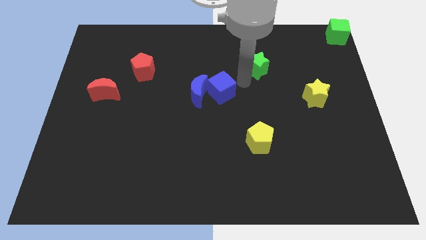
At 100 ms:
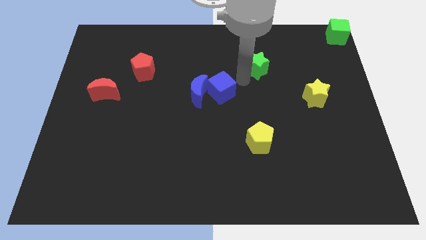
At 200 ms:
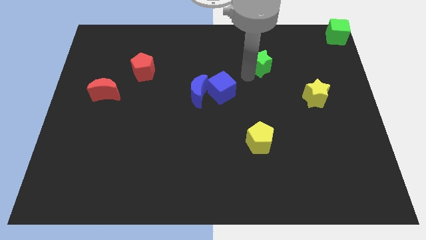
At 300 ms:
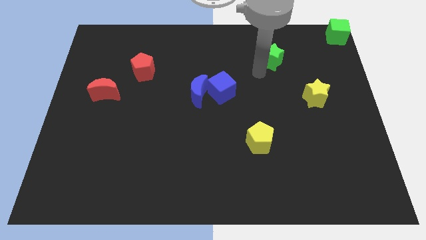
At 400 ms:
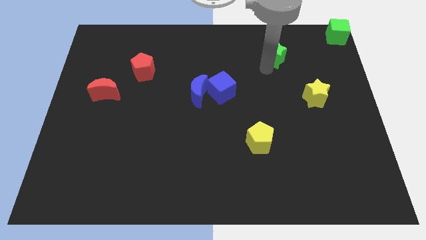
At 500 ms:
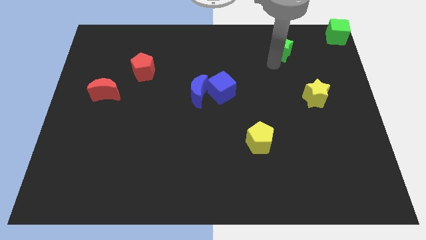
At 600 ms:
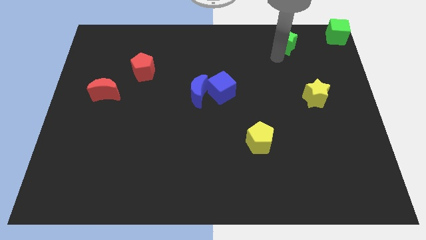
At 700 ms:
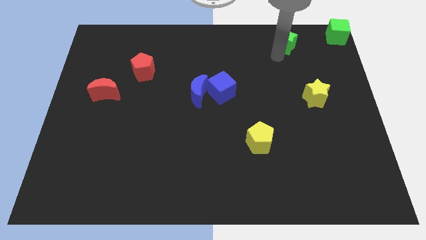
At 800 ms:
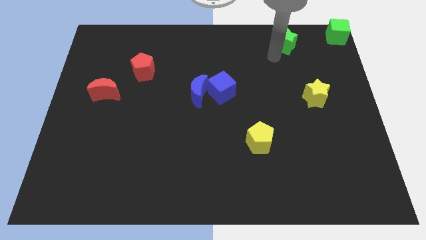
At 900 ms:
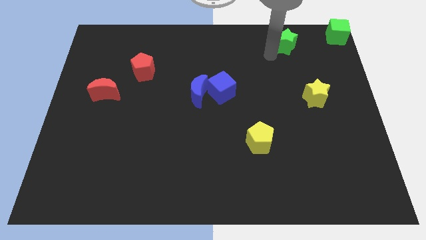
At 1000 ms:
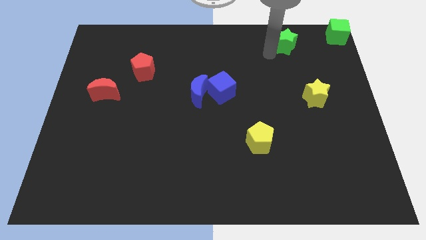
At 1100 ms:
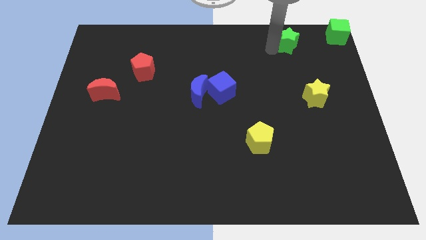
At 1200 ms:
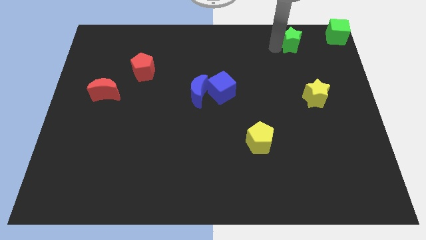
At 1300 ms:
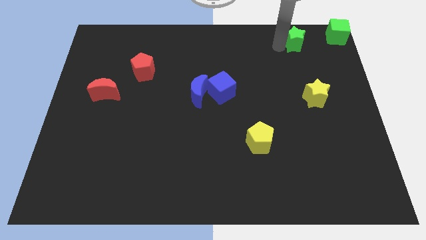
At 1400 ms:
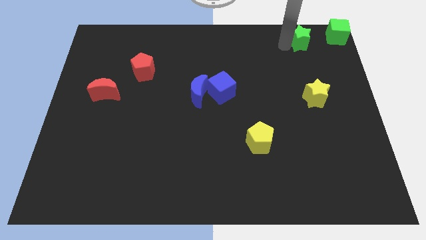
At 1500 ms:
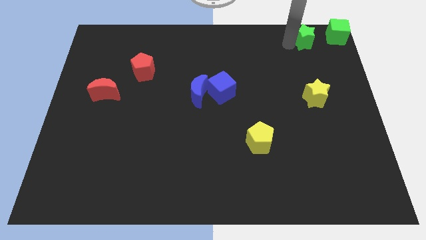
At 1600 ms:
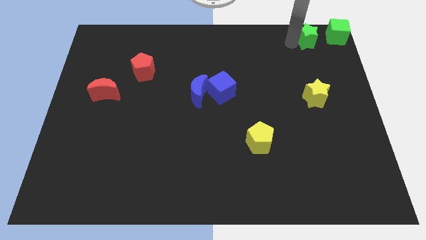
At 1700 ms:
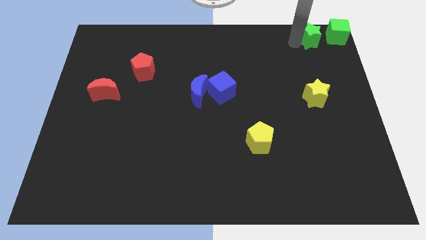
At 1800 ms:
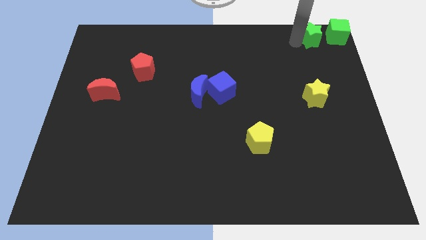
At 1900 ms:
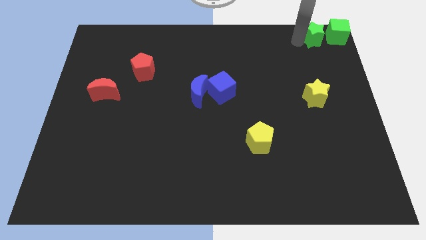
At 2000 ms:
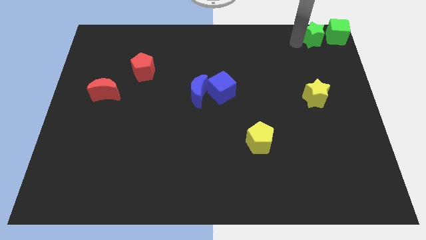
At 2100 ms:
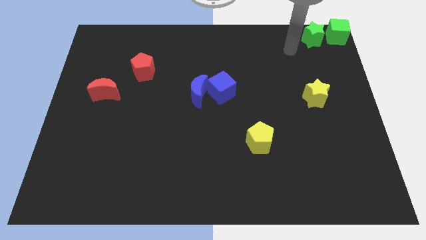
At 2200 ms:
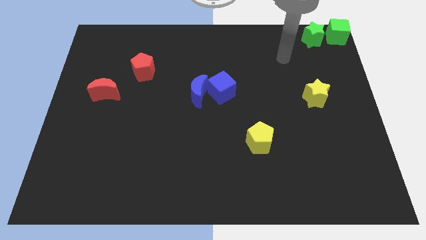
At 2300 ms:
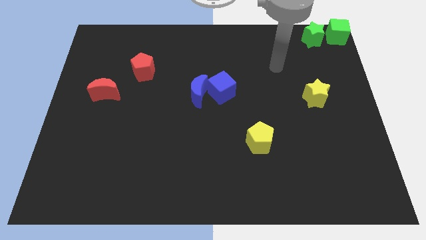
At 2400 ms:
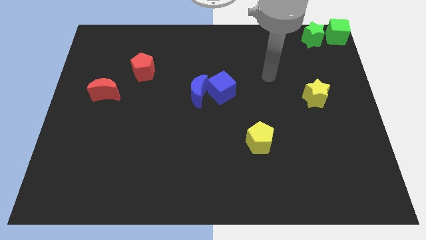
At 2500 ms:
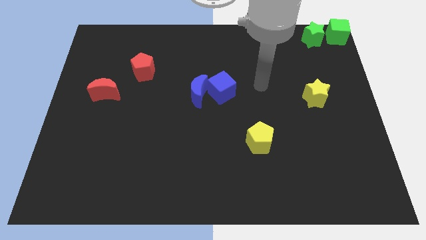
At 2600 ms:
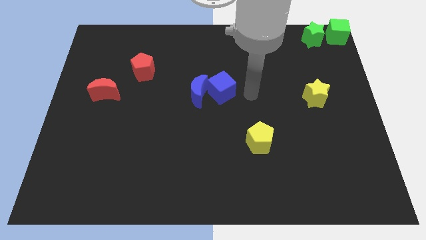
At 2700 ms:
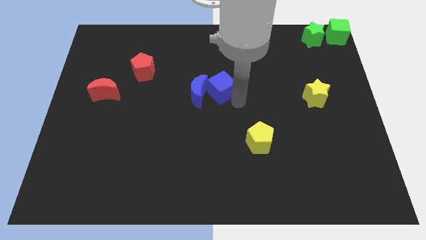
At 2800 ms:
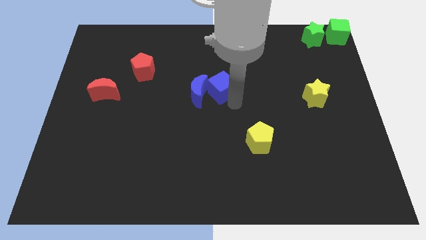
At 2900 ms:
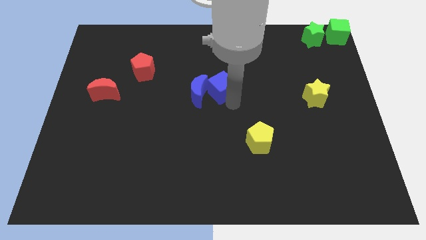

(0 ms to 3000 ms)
put the green star to the left of the green cube

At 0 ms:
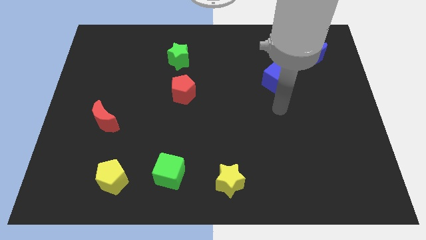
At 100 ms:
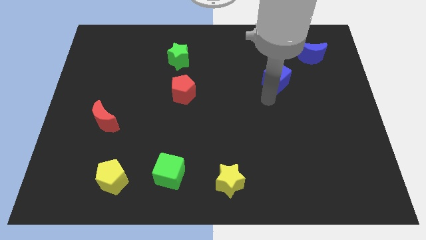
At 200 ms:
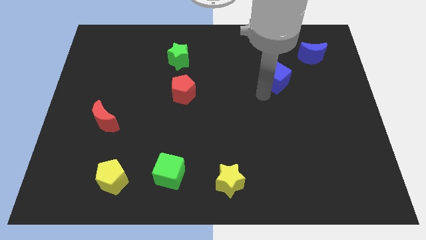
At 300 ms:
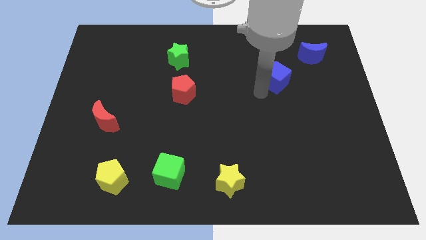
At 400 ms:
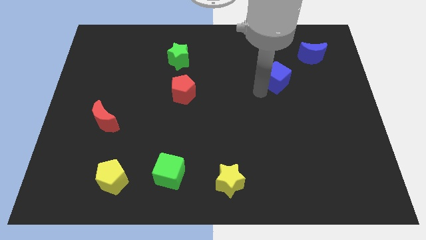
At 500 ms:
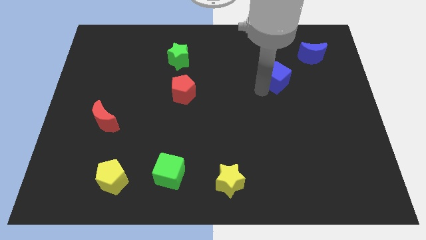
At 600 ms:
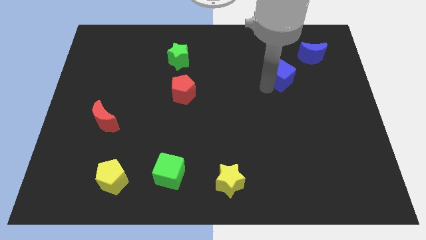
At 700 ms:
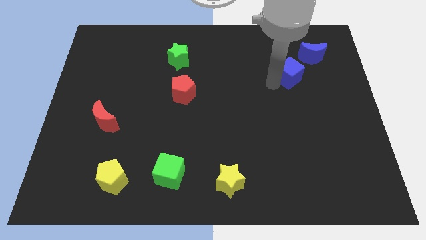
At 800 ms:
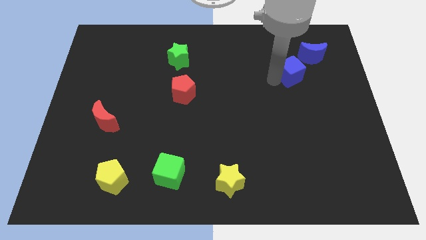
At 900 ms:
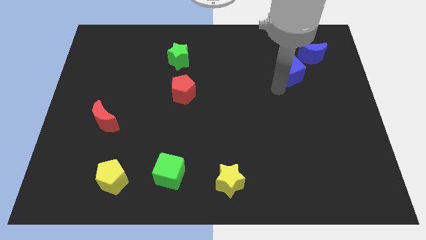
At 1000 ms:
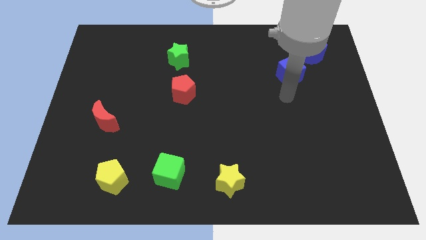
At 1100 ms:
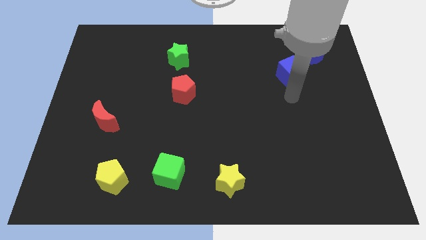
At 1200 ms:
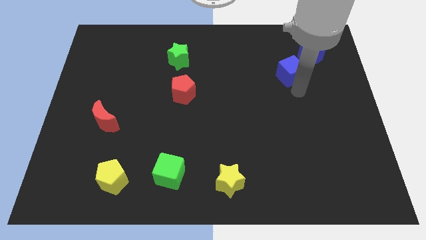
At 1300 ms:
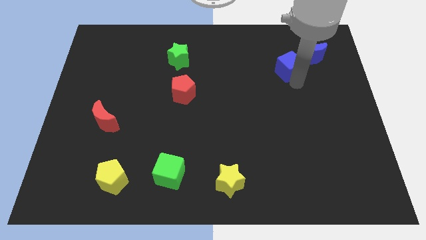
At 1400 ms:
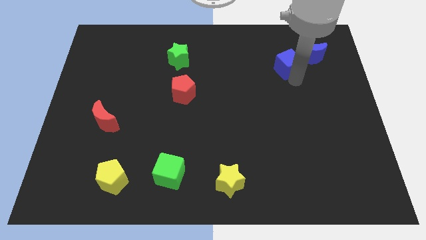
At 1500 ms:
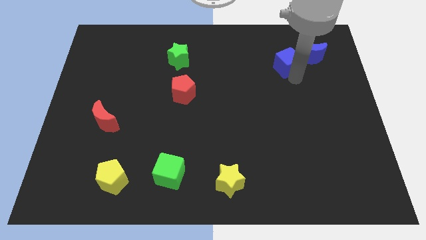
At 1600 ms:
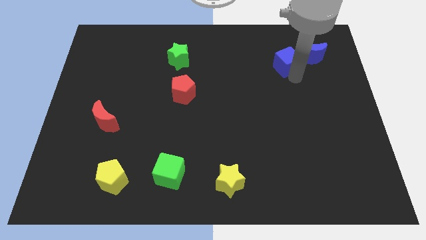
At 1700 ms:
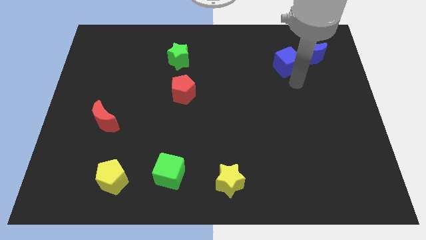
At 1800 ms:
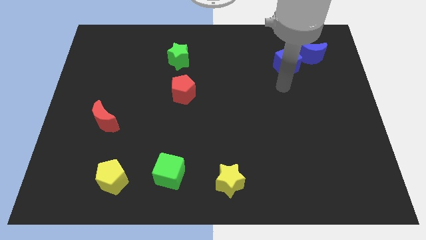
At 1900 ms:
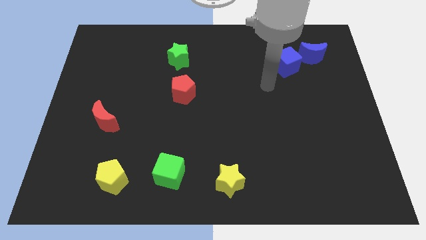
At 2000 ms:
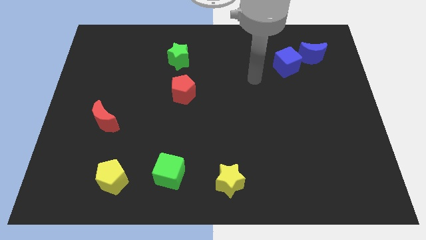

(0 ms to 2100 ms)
slide blue cube into blue moon

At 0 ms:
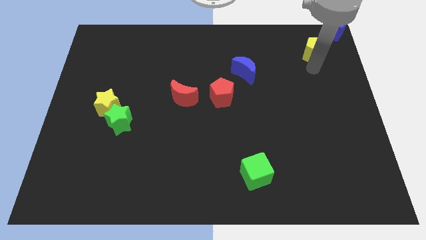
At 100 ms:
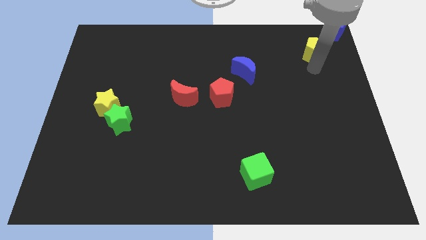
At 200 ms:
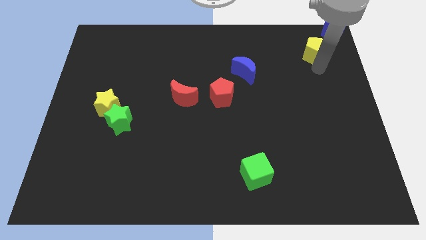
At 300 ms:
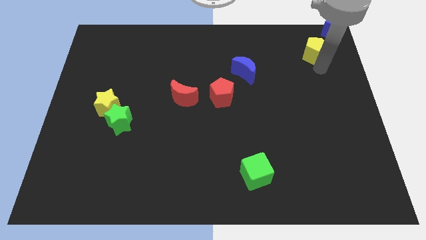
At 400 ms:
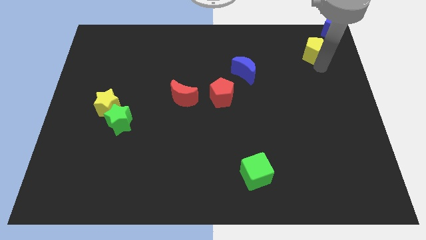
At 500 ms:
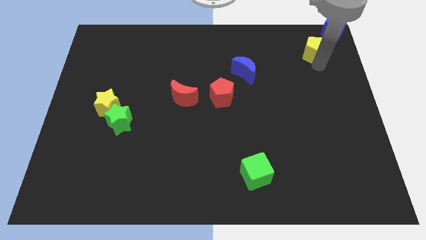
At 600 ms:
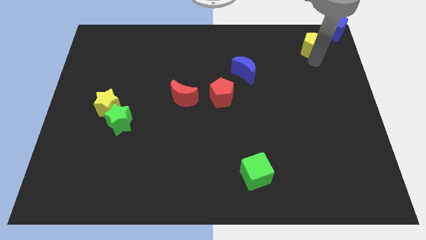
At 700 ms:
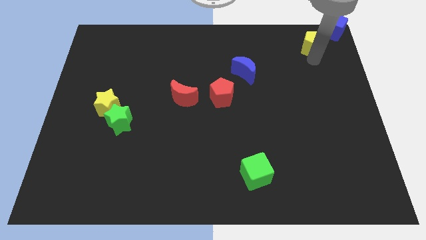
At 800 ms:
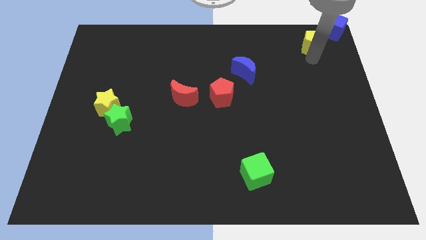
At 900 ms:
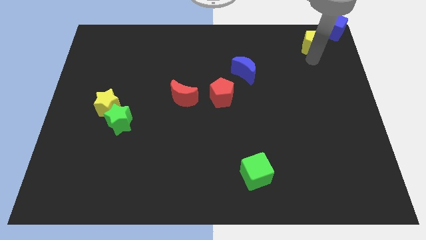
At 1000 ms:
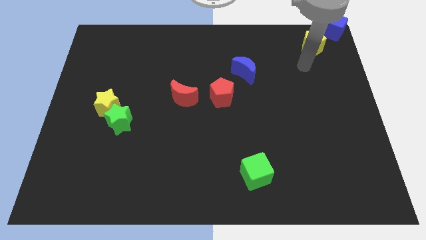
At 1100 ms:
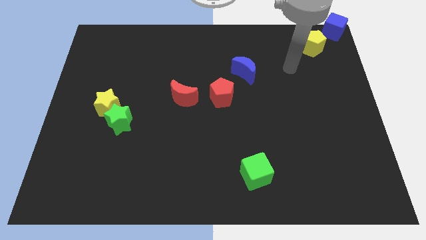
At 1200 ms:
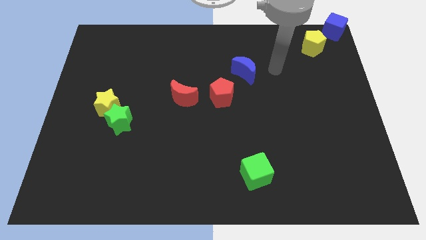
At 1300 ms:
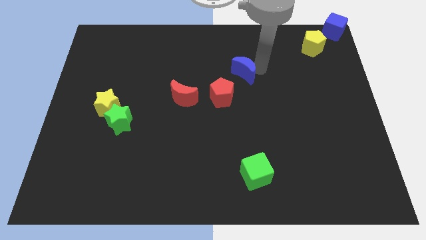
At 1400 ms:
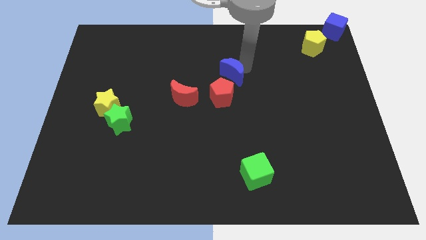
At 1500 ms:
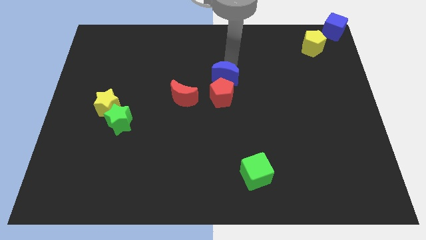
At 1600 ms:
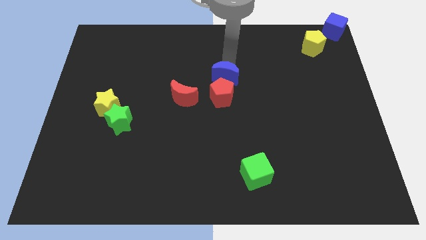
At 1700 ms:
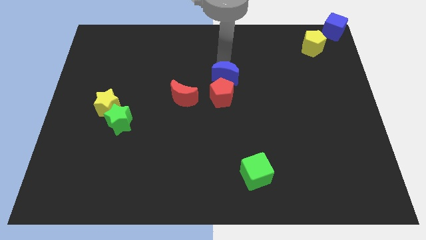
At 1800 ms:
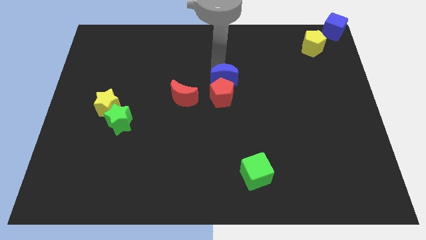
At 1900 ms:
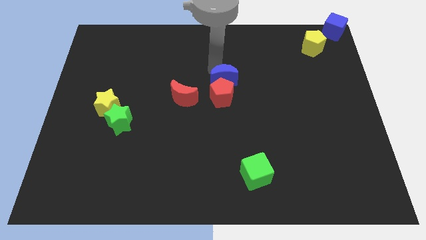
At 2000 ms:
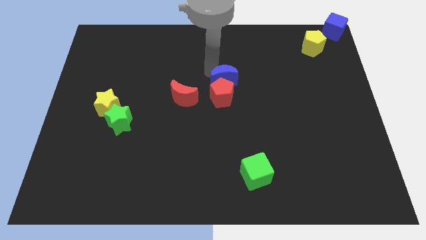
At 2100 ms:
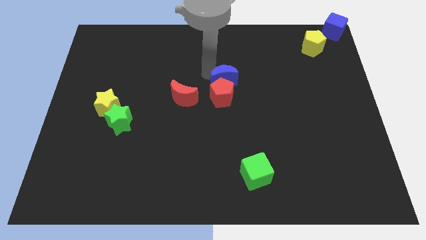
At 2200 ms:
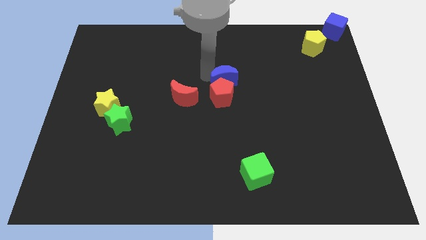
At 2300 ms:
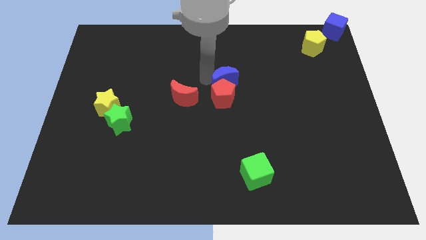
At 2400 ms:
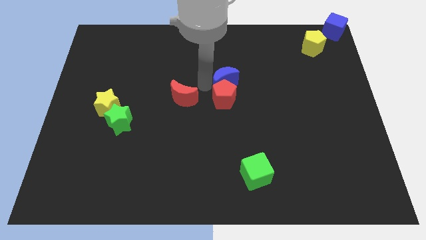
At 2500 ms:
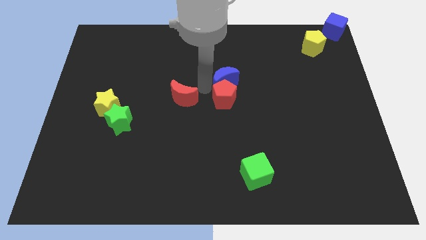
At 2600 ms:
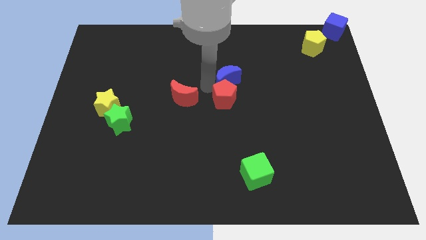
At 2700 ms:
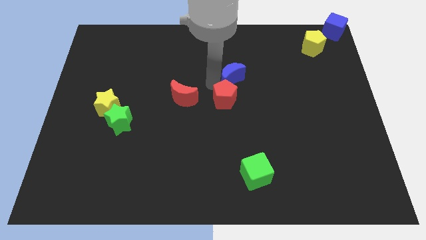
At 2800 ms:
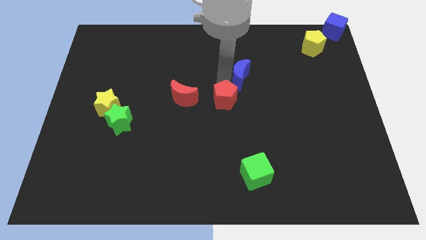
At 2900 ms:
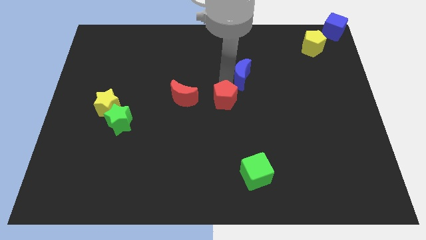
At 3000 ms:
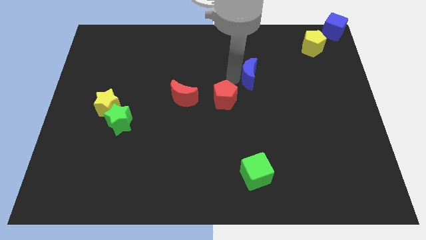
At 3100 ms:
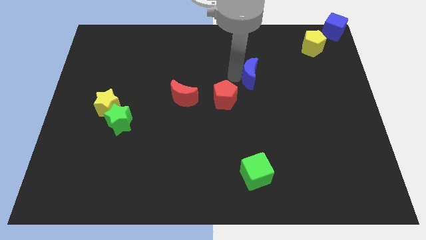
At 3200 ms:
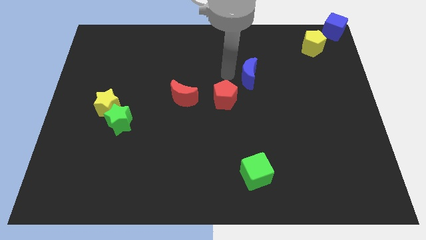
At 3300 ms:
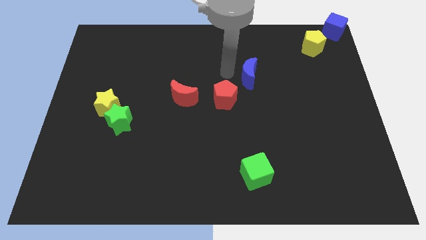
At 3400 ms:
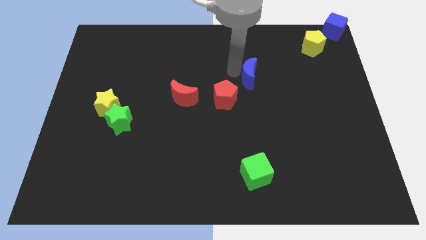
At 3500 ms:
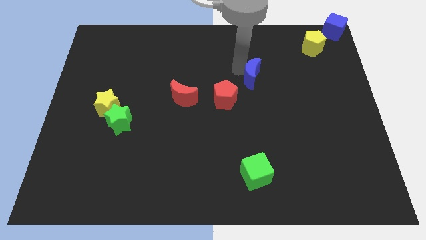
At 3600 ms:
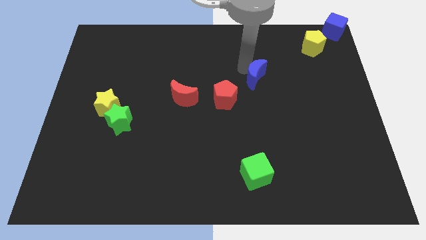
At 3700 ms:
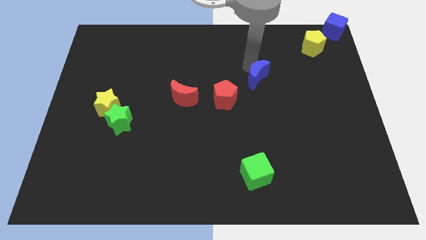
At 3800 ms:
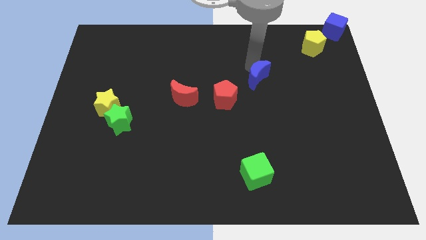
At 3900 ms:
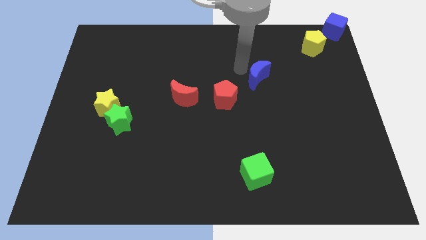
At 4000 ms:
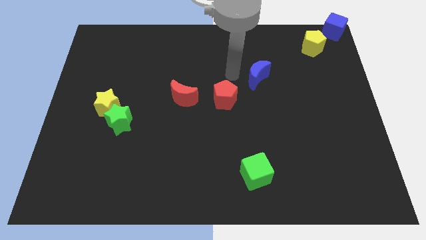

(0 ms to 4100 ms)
move the blue crescent diagonally to the right side of the red pentagon
